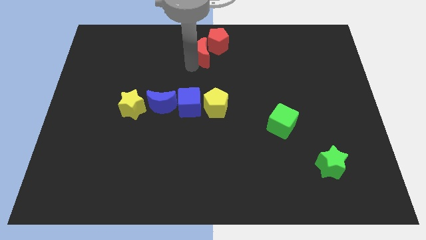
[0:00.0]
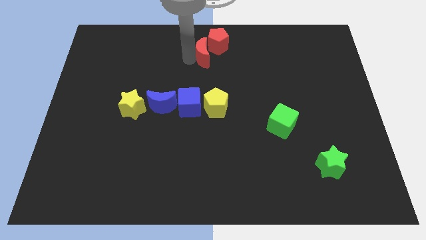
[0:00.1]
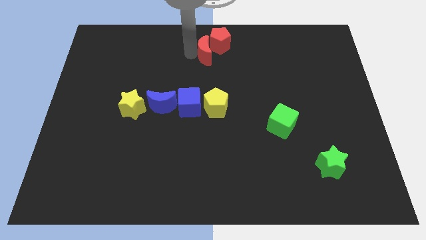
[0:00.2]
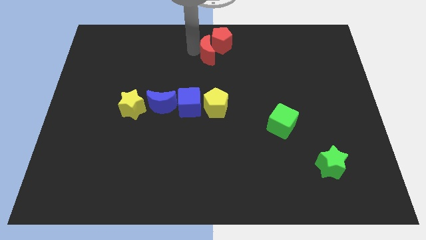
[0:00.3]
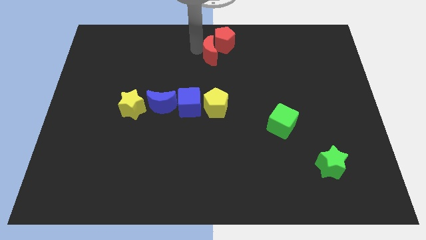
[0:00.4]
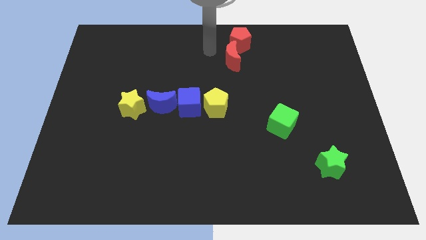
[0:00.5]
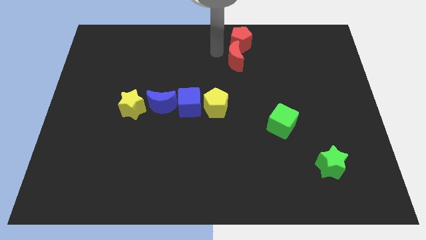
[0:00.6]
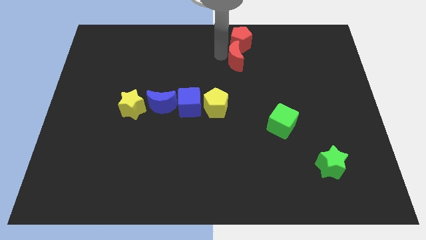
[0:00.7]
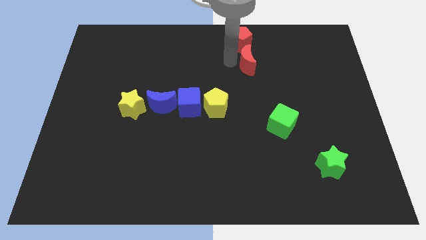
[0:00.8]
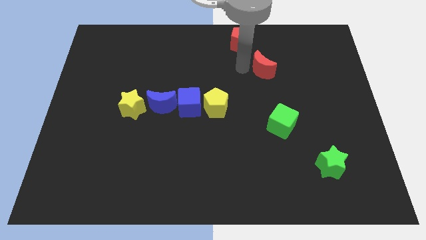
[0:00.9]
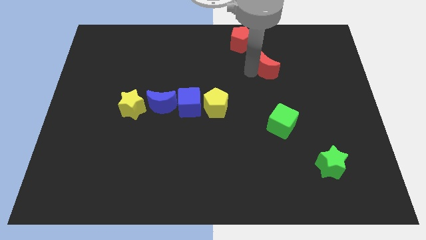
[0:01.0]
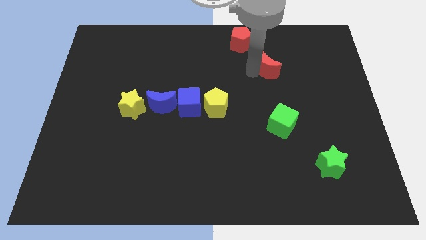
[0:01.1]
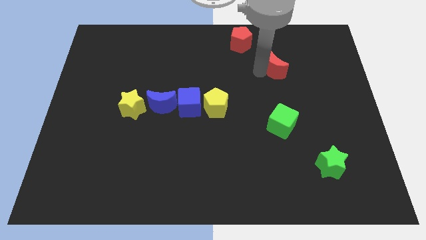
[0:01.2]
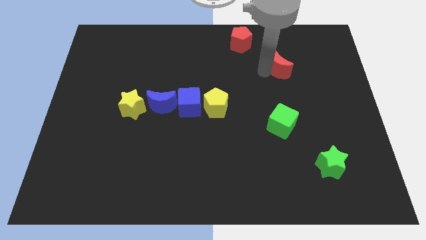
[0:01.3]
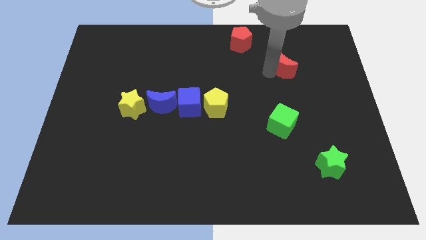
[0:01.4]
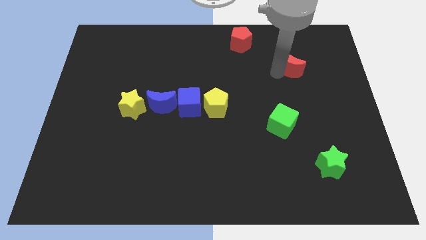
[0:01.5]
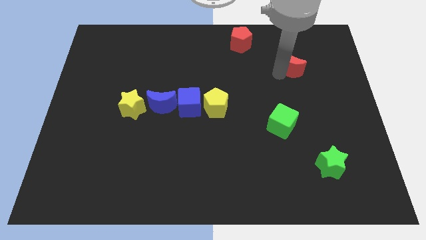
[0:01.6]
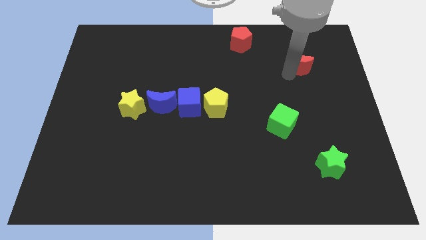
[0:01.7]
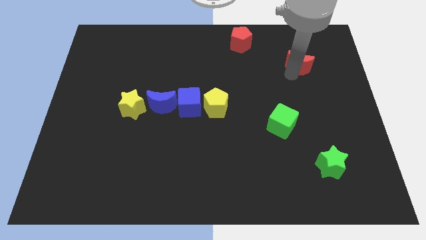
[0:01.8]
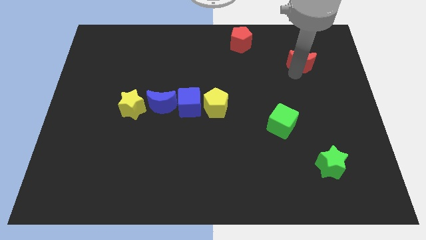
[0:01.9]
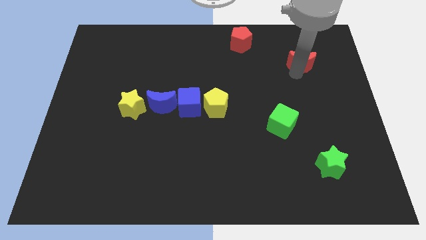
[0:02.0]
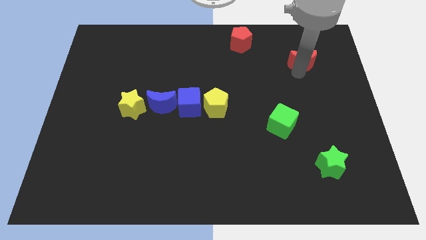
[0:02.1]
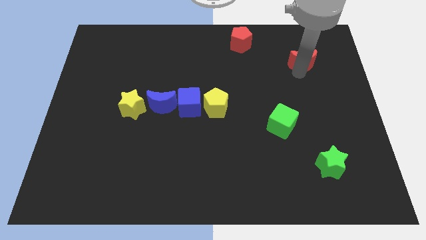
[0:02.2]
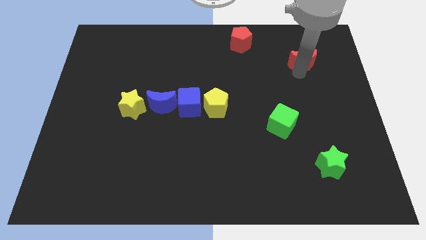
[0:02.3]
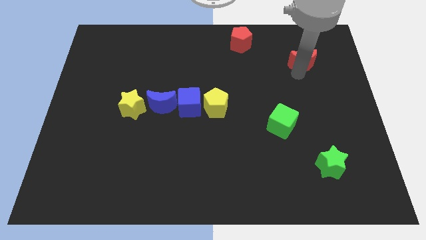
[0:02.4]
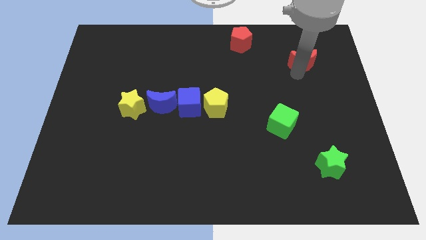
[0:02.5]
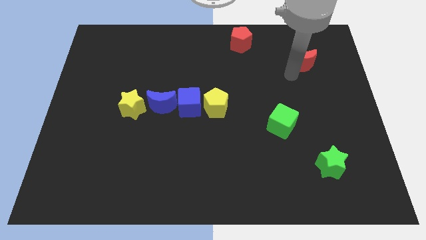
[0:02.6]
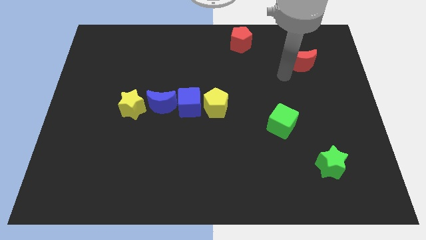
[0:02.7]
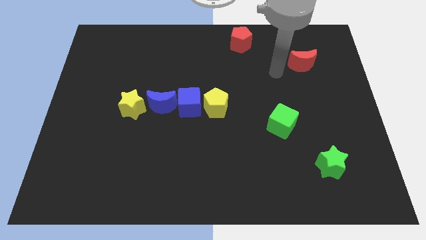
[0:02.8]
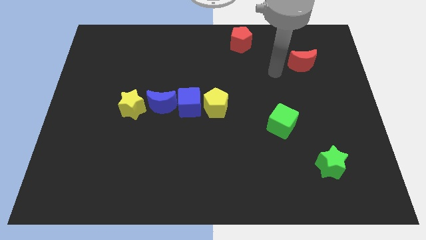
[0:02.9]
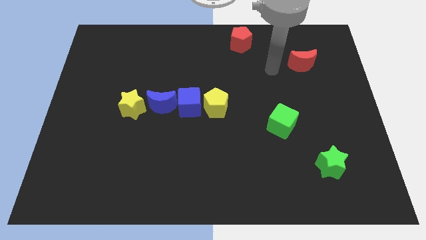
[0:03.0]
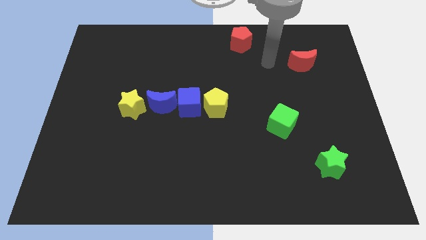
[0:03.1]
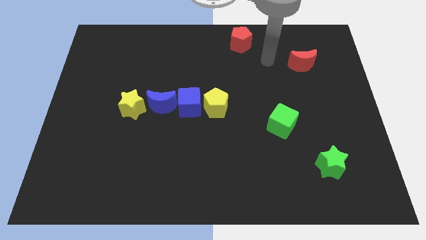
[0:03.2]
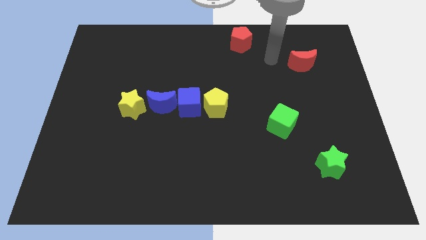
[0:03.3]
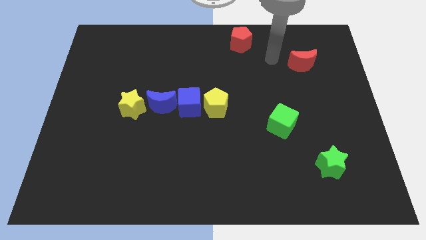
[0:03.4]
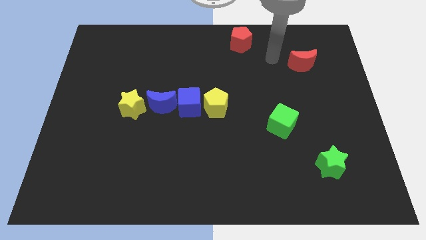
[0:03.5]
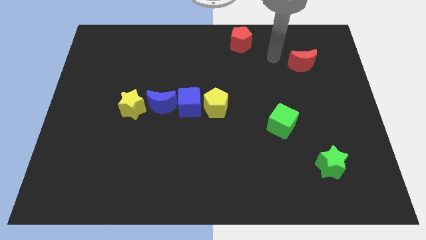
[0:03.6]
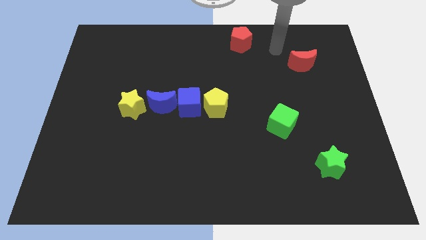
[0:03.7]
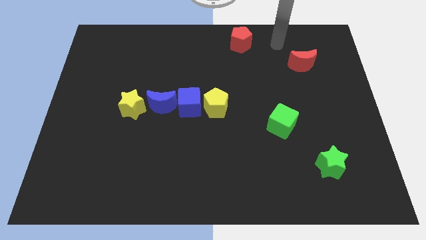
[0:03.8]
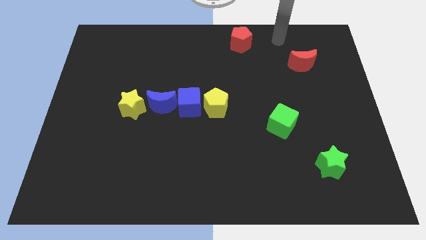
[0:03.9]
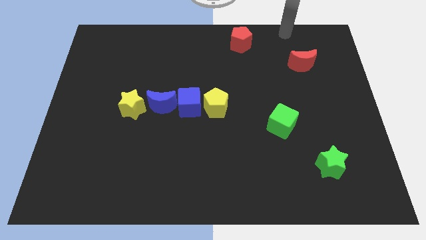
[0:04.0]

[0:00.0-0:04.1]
put the red moon diagonally bottom right to the red pentagon

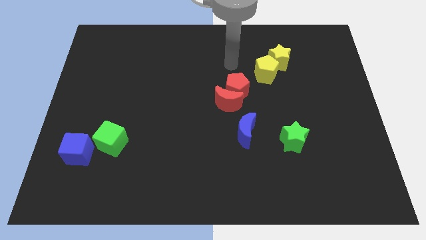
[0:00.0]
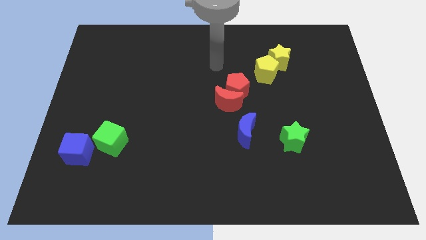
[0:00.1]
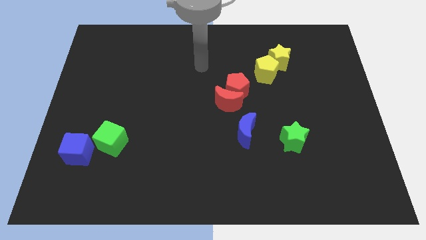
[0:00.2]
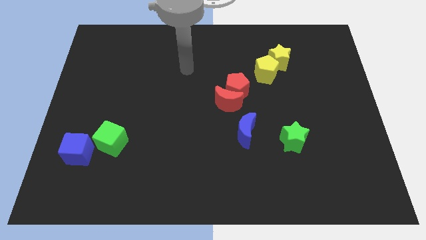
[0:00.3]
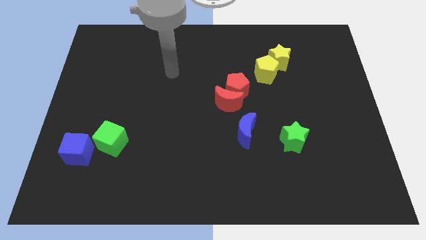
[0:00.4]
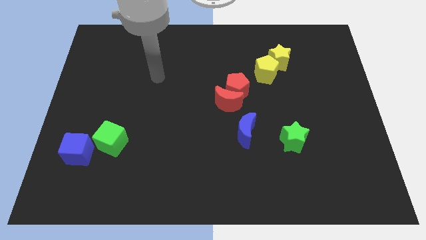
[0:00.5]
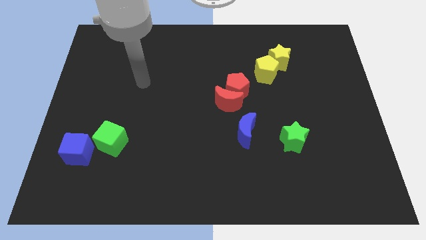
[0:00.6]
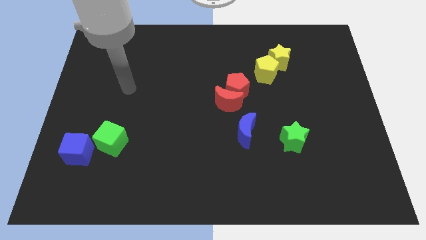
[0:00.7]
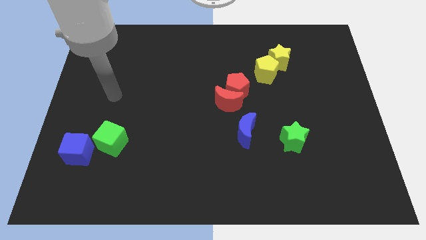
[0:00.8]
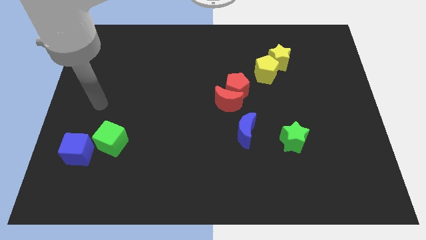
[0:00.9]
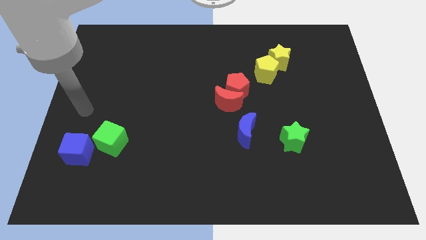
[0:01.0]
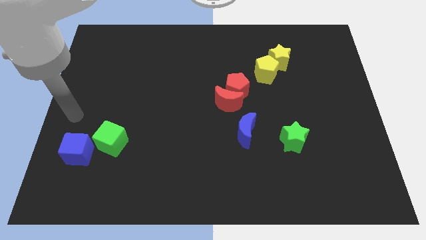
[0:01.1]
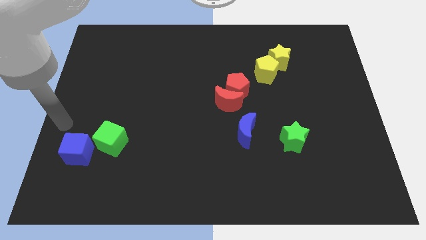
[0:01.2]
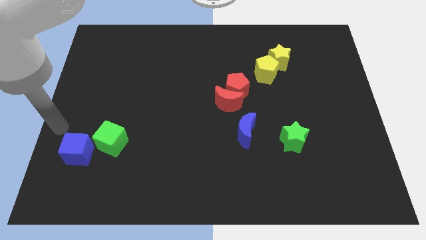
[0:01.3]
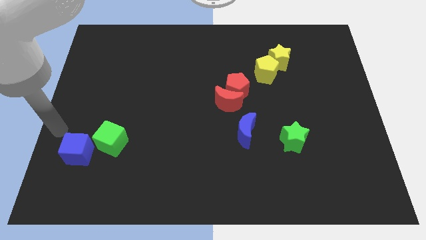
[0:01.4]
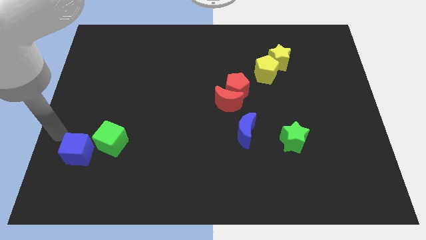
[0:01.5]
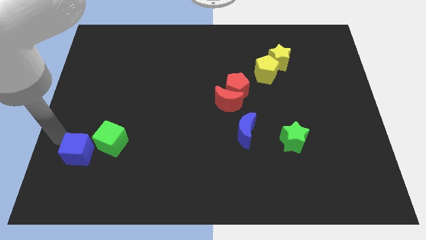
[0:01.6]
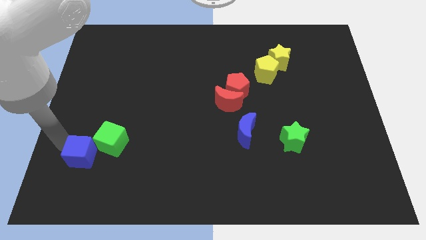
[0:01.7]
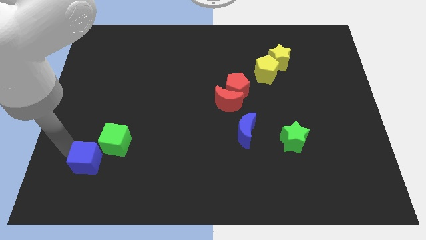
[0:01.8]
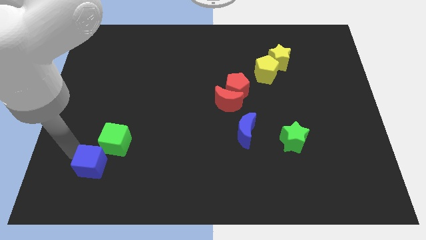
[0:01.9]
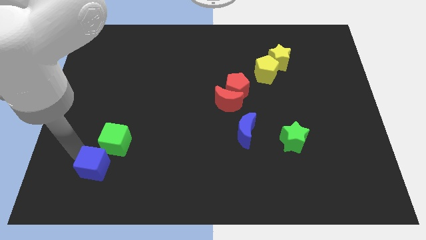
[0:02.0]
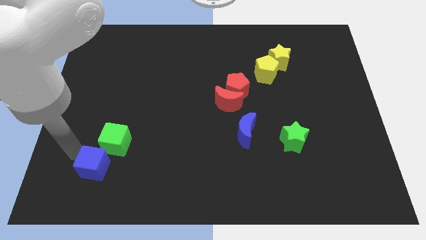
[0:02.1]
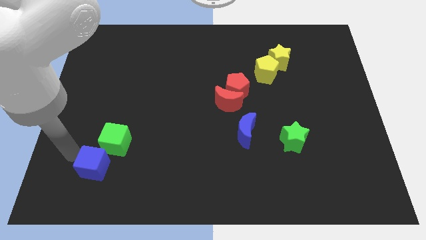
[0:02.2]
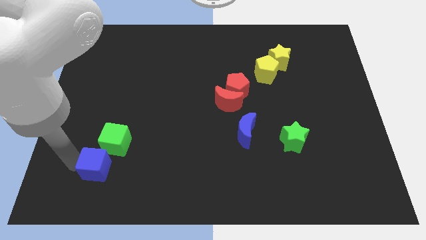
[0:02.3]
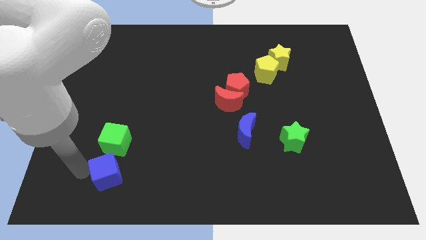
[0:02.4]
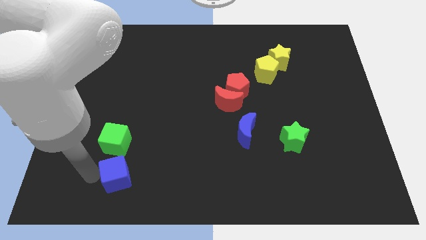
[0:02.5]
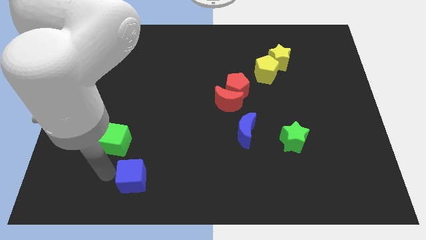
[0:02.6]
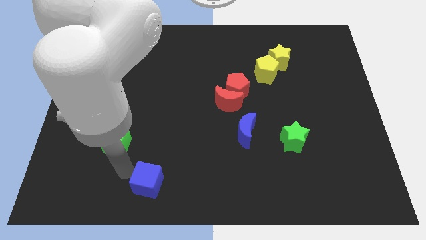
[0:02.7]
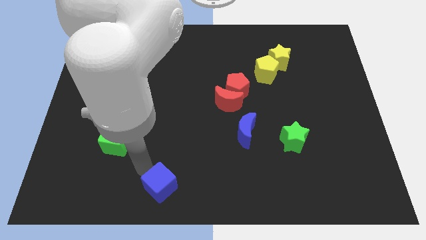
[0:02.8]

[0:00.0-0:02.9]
push the blue cube to the bottom right of the green cube

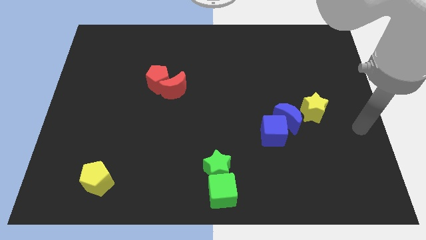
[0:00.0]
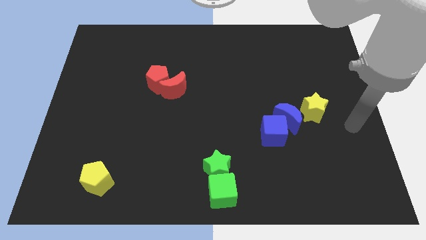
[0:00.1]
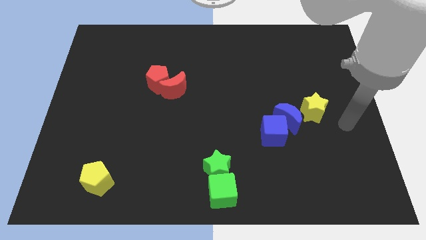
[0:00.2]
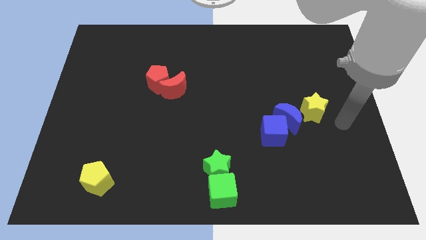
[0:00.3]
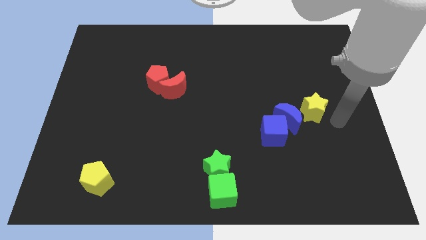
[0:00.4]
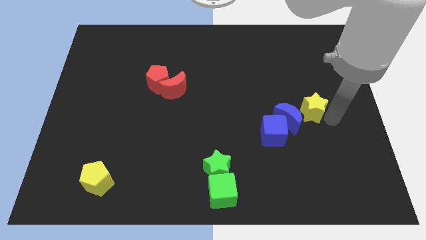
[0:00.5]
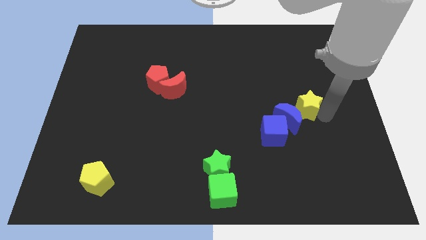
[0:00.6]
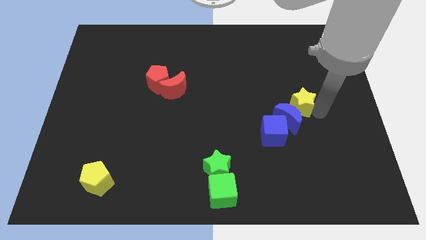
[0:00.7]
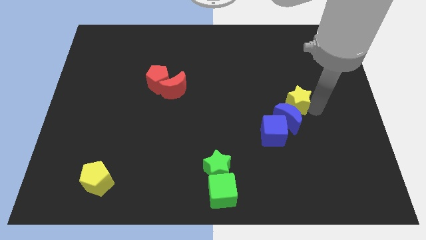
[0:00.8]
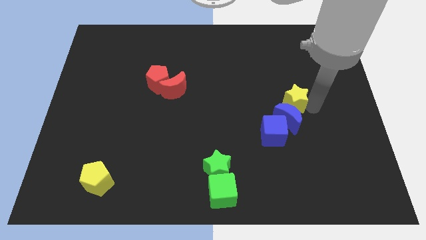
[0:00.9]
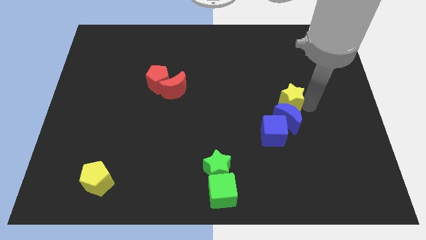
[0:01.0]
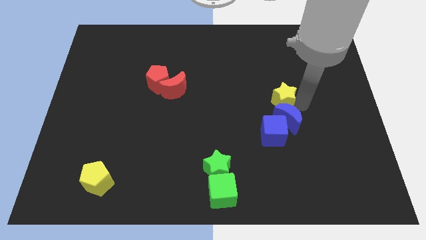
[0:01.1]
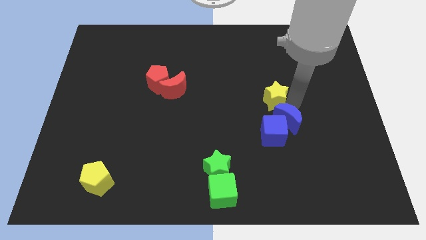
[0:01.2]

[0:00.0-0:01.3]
move the yellow star above the blue blocks

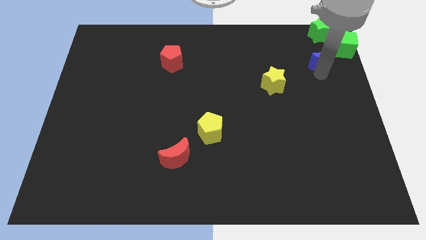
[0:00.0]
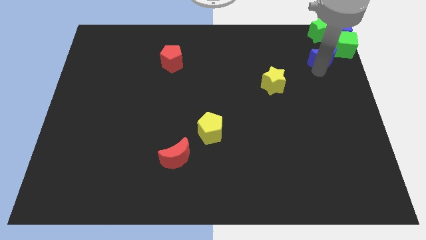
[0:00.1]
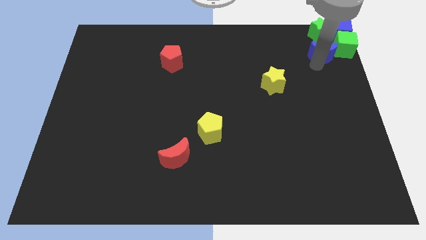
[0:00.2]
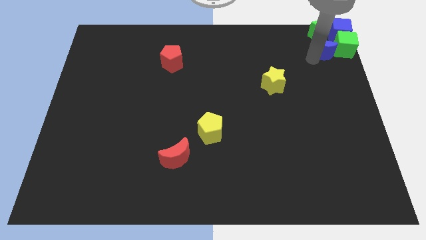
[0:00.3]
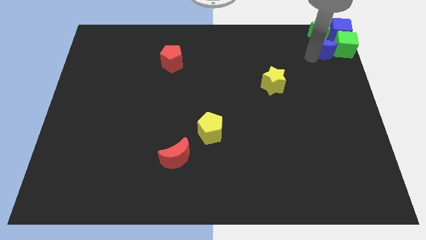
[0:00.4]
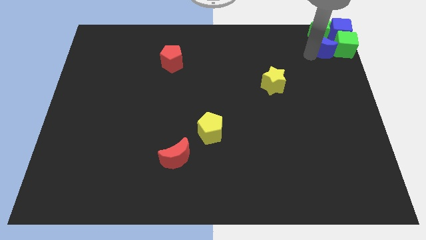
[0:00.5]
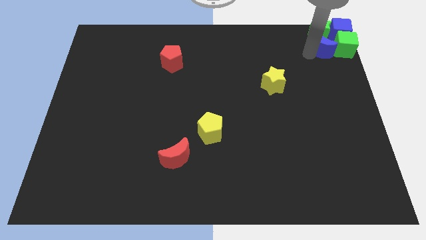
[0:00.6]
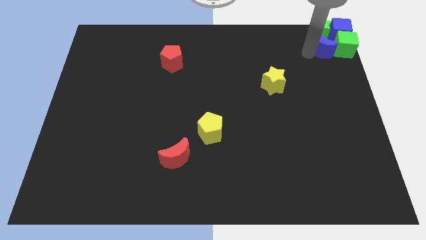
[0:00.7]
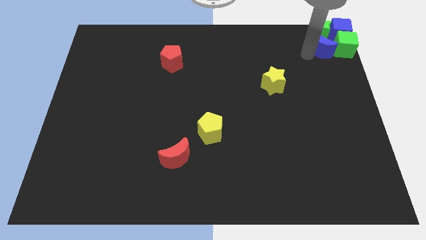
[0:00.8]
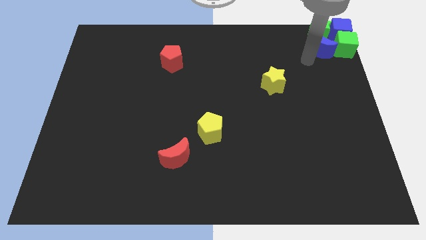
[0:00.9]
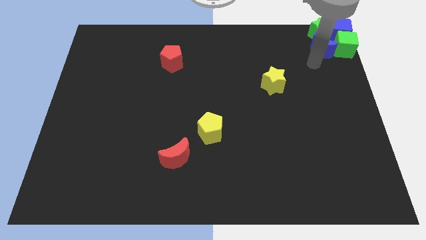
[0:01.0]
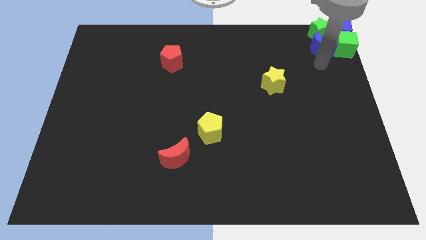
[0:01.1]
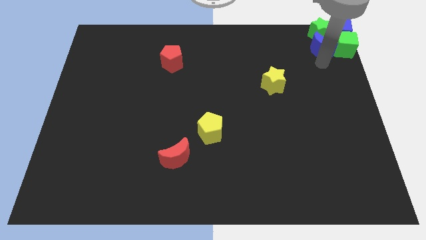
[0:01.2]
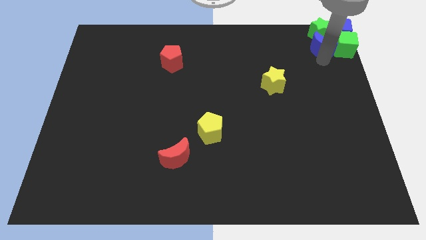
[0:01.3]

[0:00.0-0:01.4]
push the blue moon into the group of blocks
